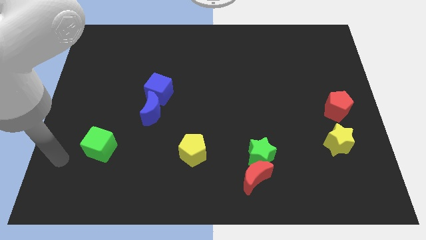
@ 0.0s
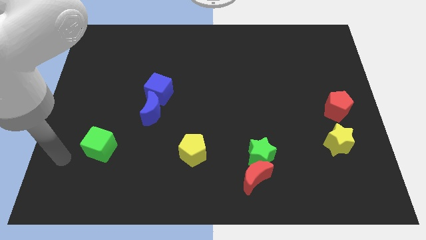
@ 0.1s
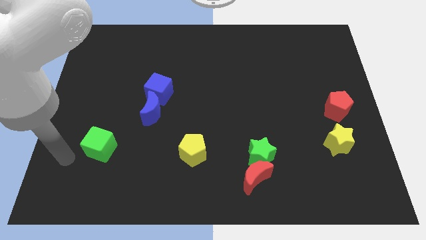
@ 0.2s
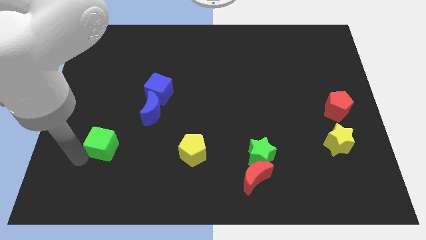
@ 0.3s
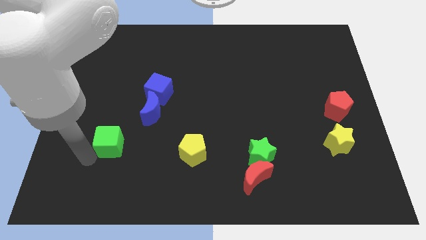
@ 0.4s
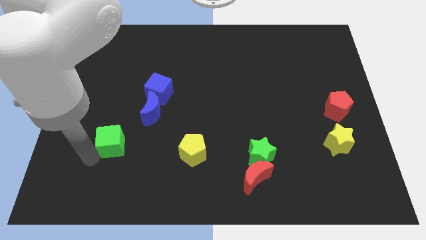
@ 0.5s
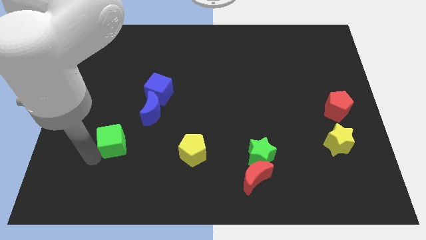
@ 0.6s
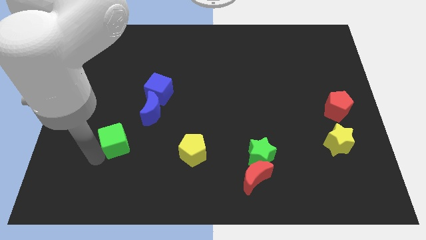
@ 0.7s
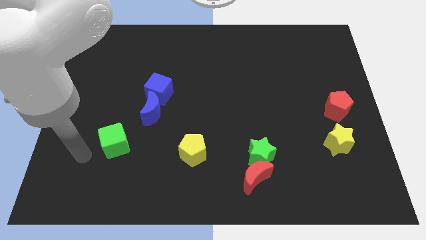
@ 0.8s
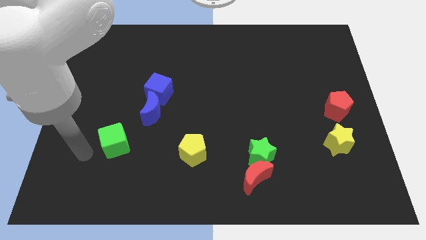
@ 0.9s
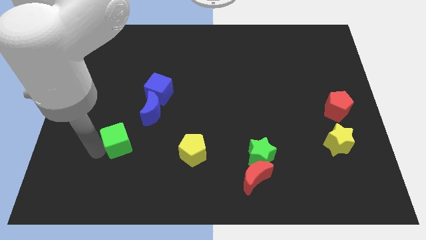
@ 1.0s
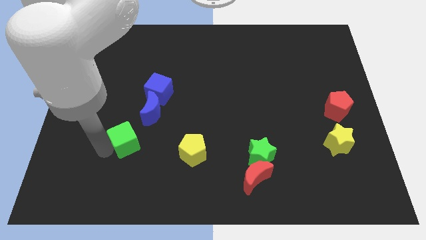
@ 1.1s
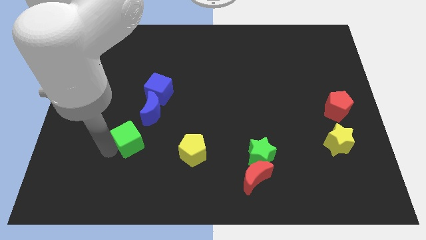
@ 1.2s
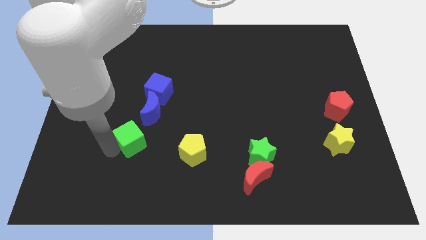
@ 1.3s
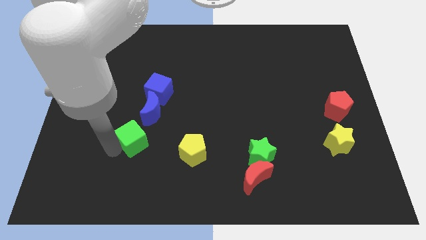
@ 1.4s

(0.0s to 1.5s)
place the green cube at the bottom of blue moon

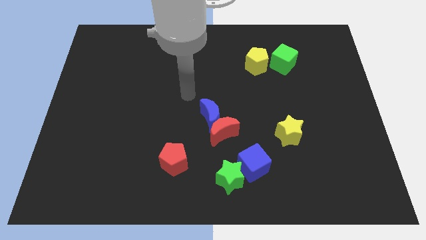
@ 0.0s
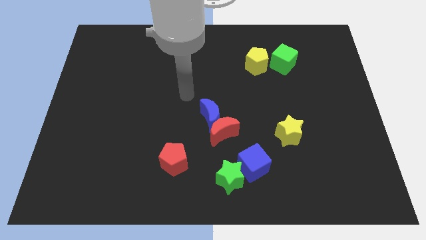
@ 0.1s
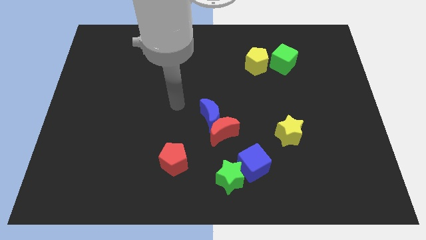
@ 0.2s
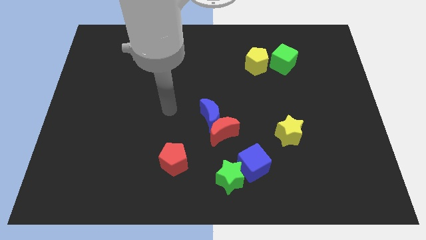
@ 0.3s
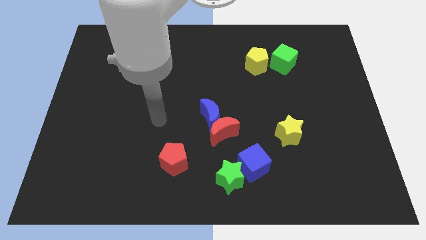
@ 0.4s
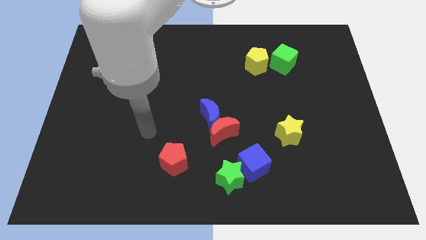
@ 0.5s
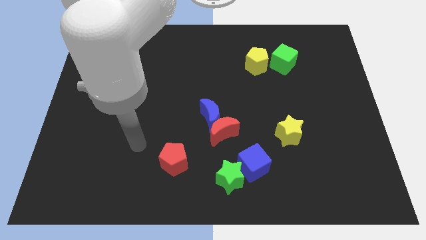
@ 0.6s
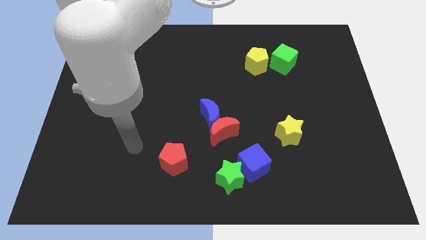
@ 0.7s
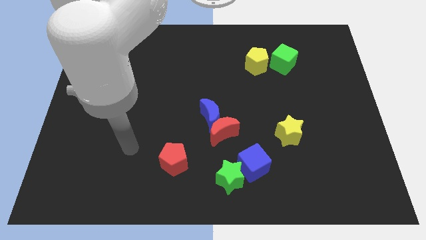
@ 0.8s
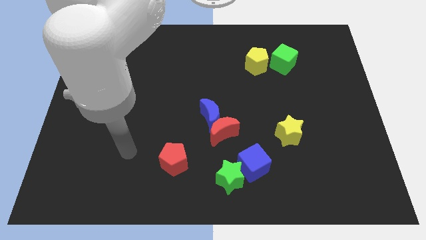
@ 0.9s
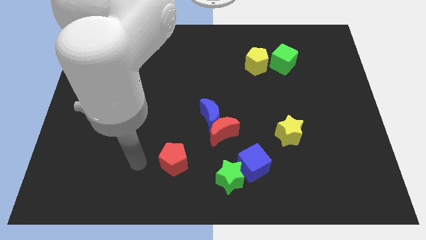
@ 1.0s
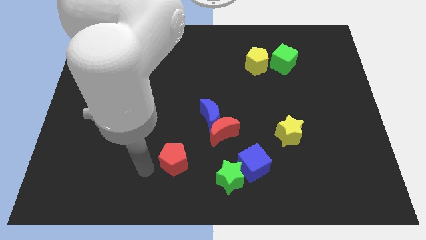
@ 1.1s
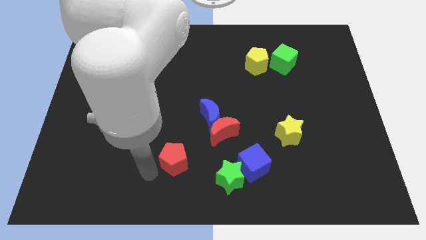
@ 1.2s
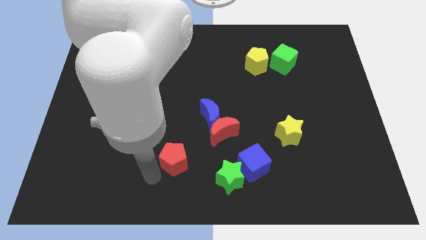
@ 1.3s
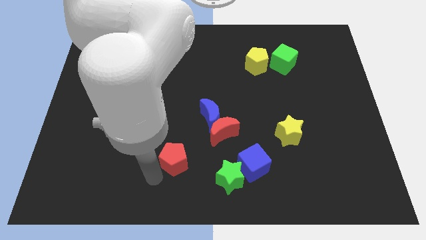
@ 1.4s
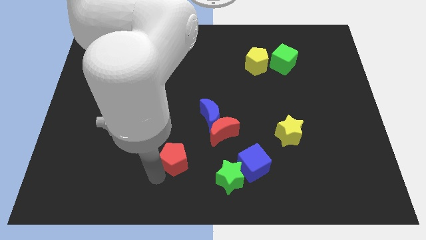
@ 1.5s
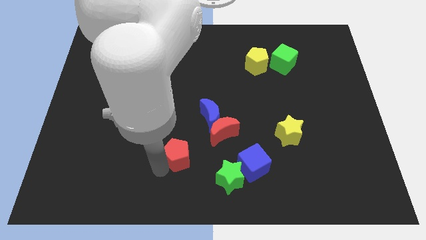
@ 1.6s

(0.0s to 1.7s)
point your hand at the bottom left side of the red pentagon

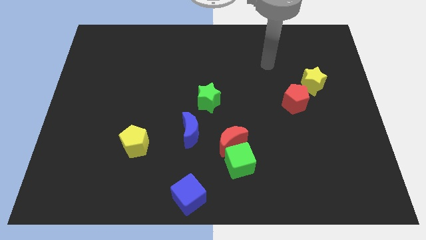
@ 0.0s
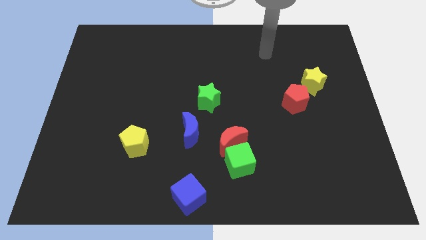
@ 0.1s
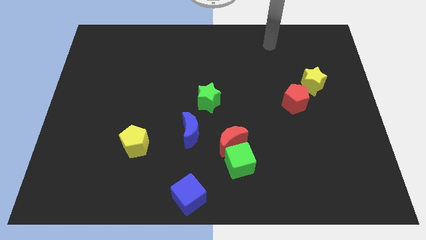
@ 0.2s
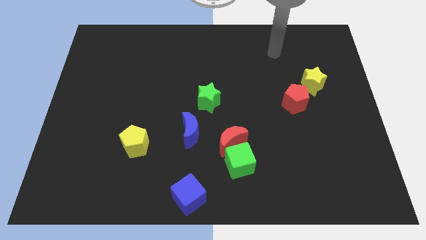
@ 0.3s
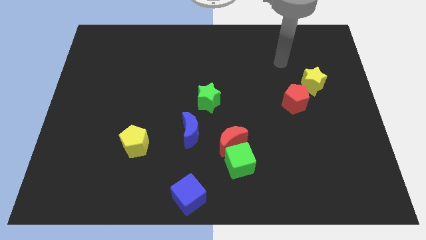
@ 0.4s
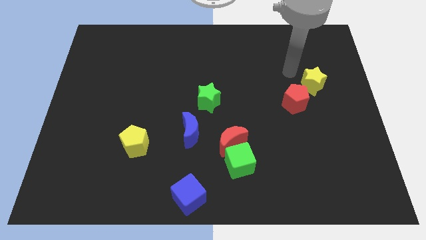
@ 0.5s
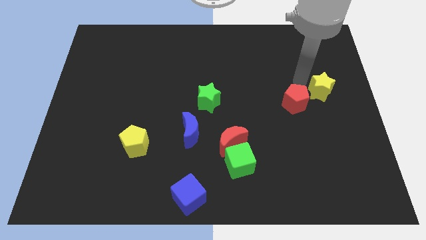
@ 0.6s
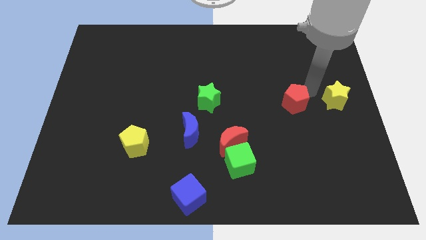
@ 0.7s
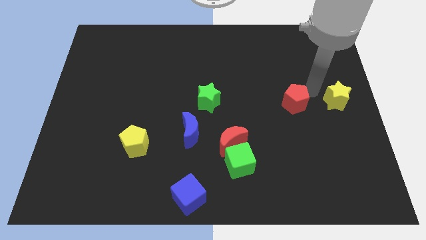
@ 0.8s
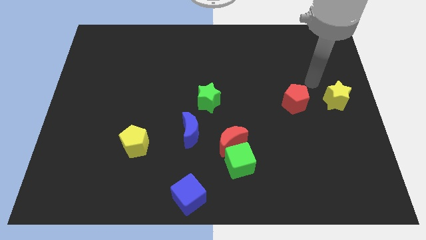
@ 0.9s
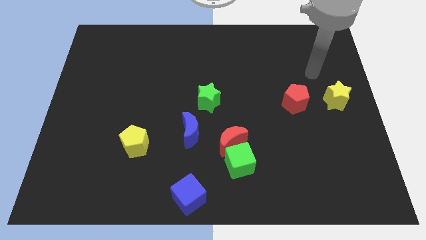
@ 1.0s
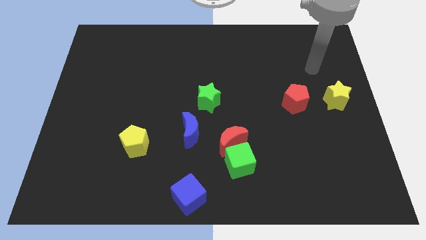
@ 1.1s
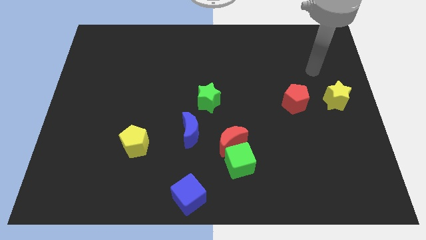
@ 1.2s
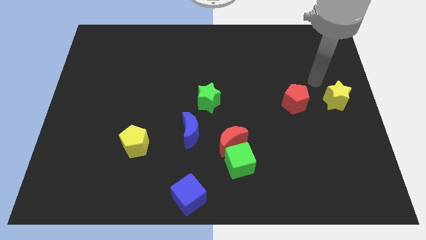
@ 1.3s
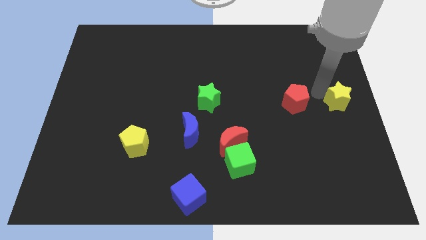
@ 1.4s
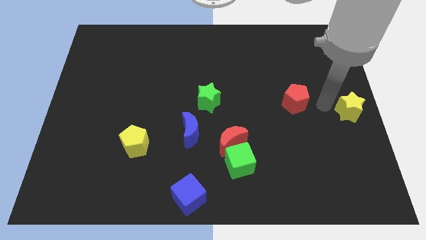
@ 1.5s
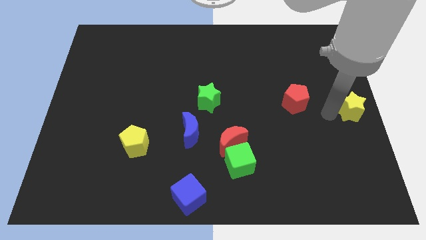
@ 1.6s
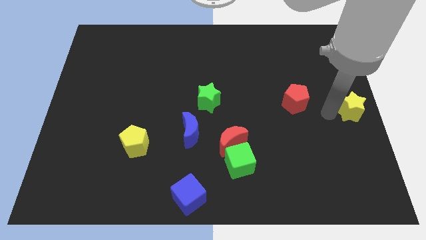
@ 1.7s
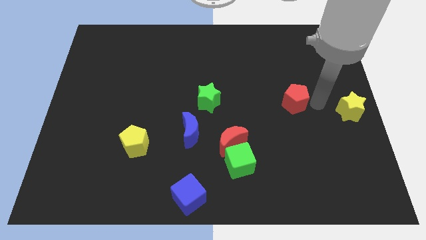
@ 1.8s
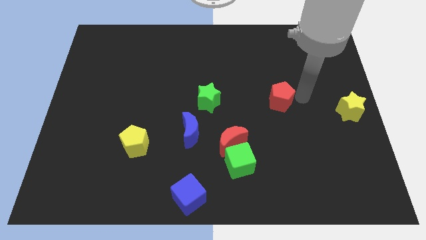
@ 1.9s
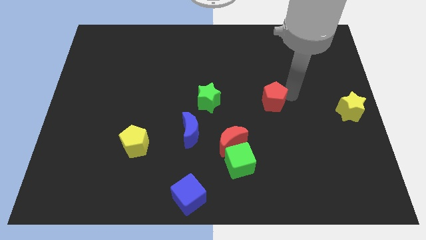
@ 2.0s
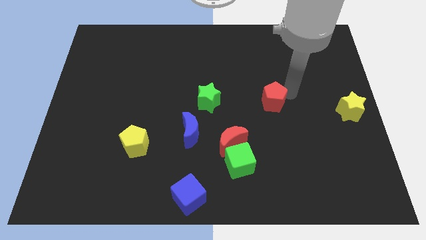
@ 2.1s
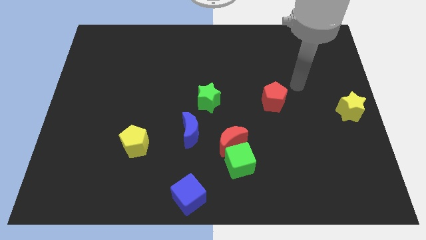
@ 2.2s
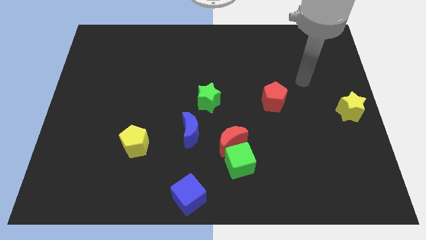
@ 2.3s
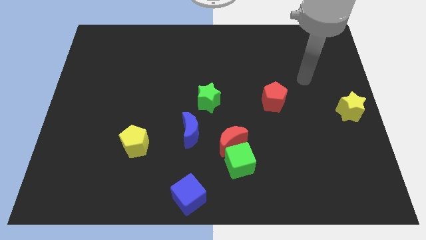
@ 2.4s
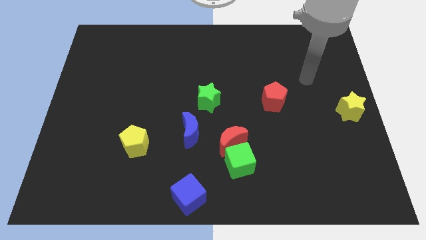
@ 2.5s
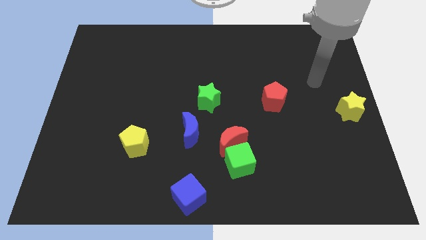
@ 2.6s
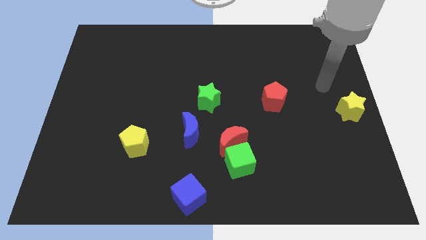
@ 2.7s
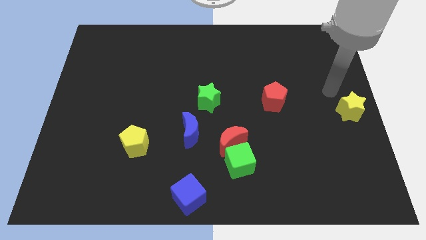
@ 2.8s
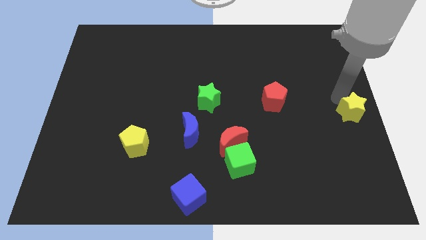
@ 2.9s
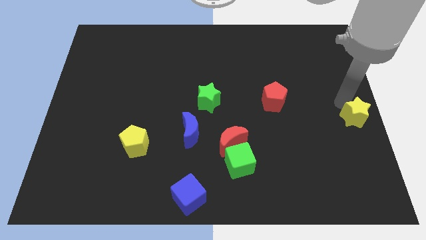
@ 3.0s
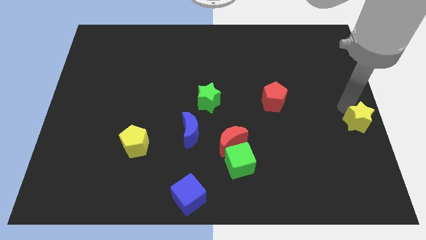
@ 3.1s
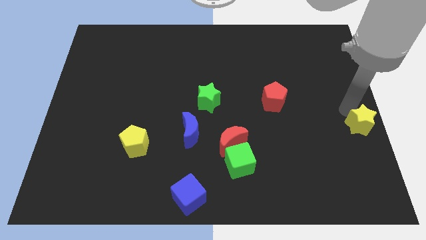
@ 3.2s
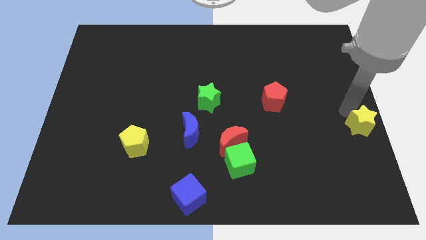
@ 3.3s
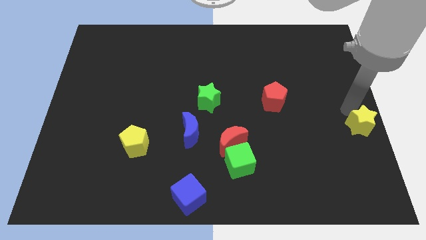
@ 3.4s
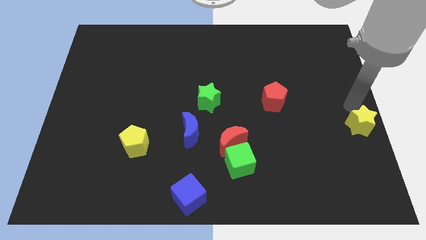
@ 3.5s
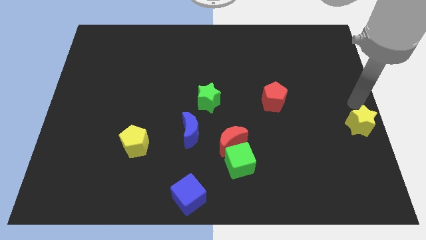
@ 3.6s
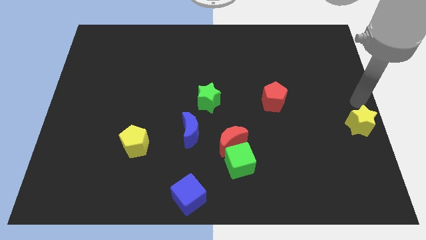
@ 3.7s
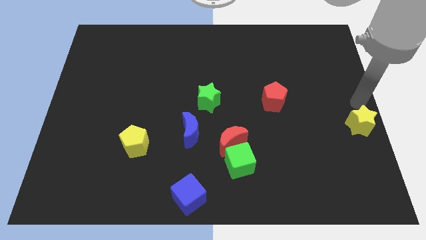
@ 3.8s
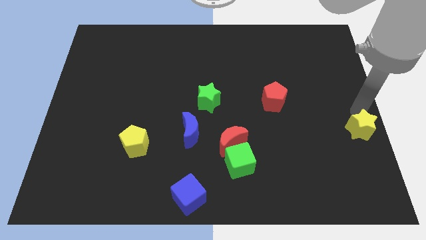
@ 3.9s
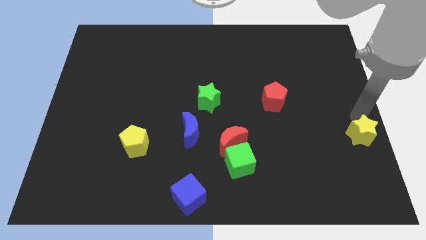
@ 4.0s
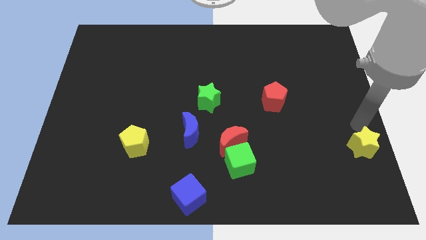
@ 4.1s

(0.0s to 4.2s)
push the yellow star to the center right of the board

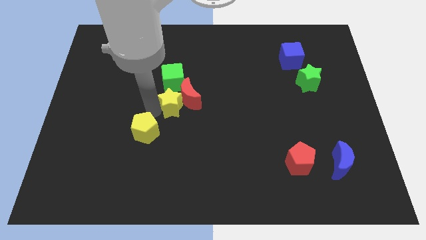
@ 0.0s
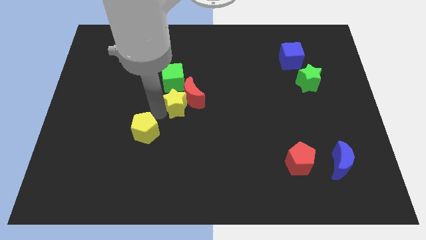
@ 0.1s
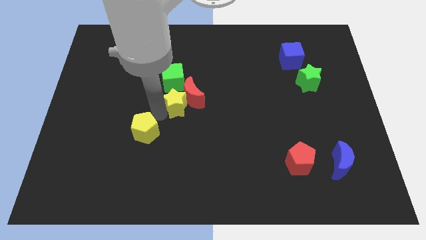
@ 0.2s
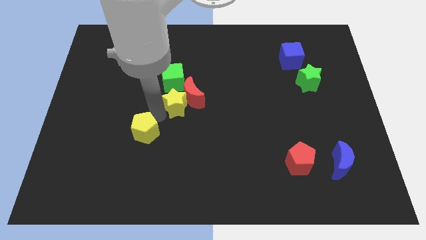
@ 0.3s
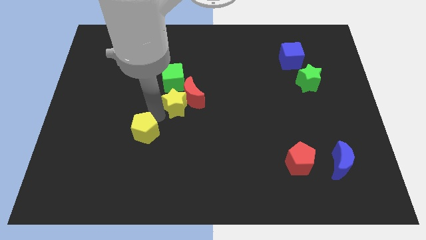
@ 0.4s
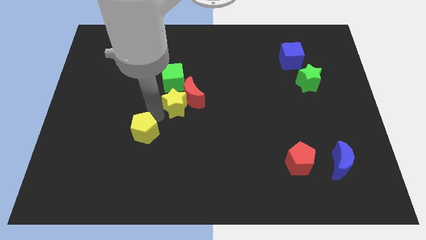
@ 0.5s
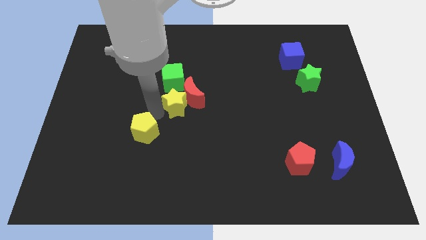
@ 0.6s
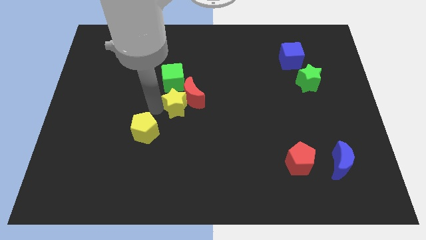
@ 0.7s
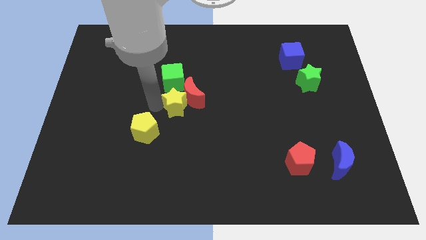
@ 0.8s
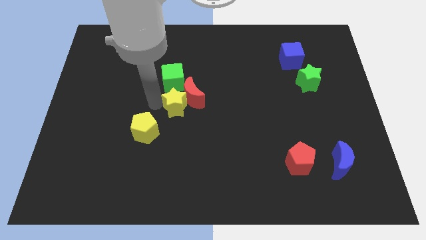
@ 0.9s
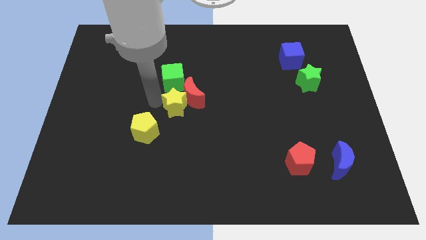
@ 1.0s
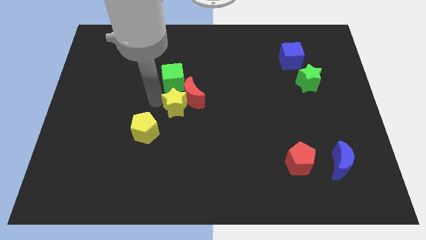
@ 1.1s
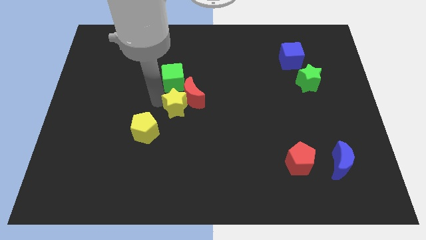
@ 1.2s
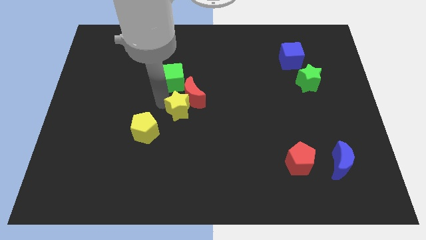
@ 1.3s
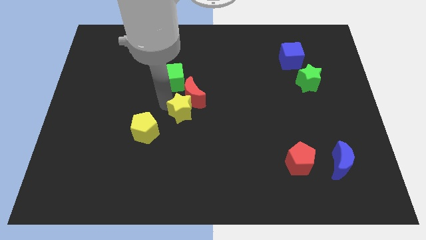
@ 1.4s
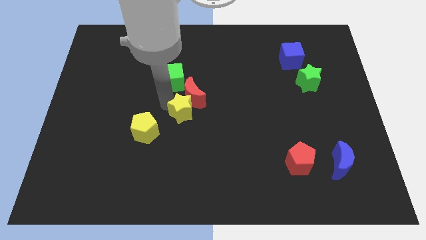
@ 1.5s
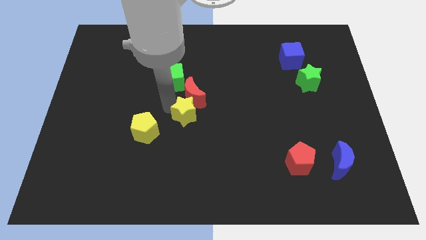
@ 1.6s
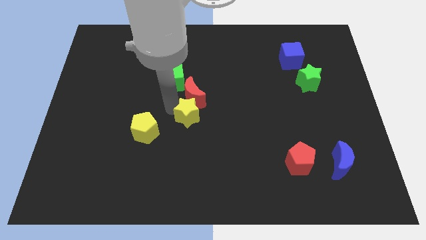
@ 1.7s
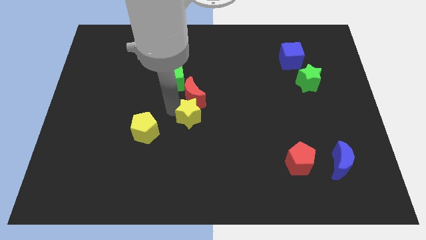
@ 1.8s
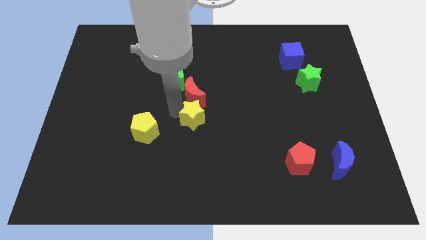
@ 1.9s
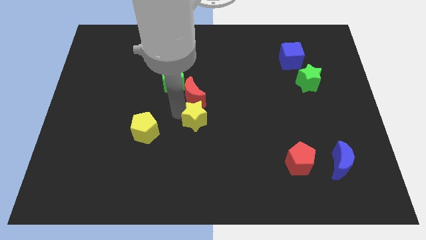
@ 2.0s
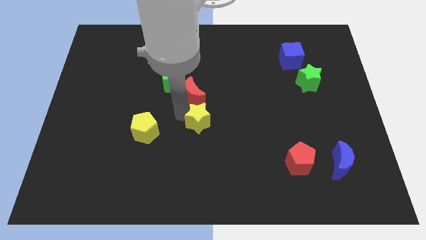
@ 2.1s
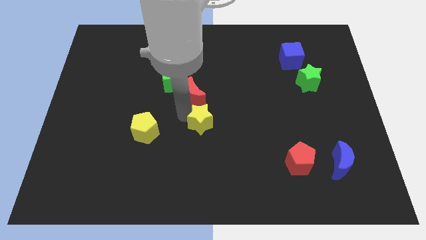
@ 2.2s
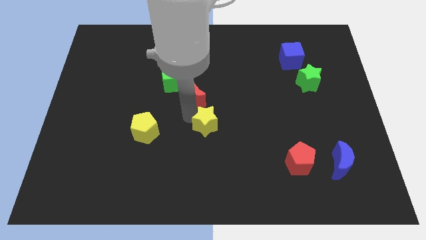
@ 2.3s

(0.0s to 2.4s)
move the yellow star to the center of the board
